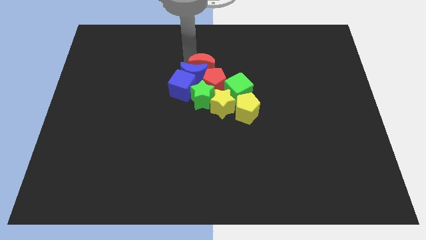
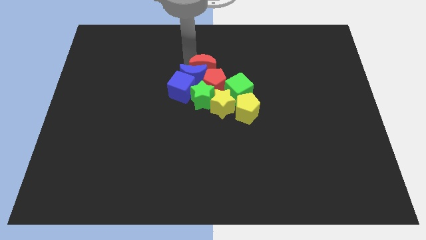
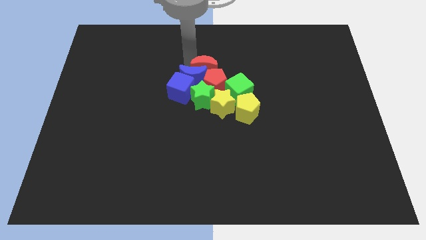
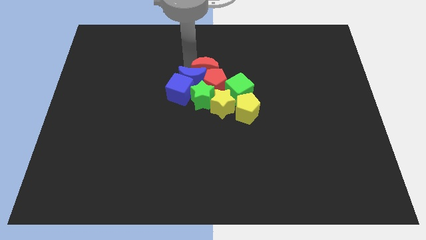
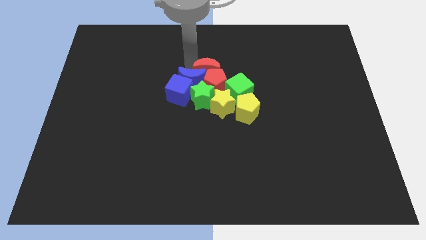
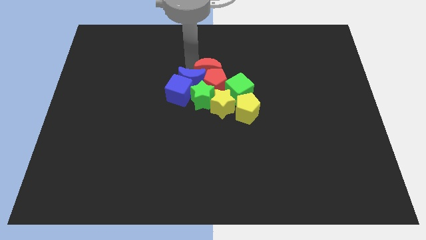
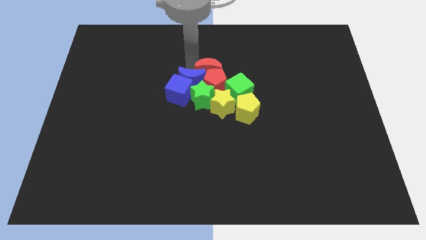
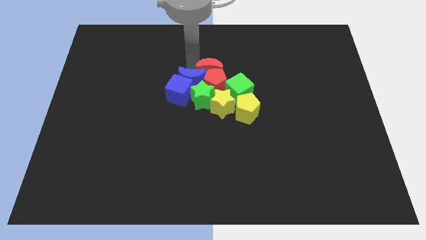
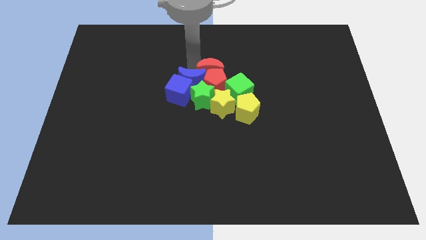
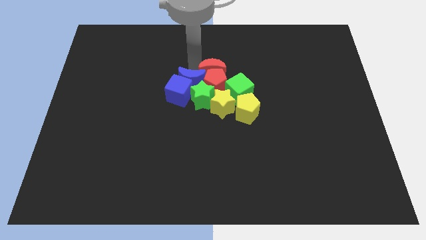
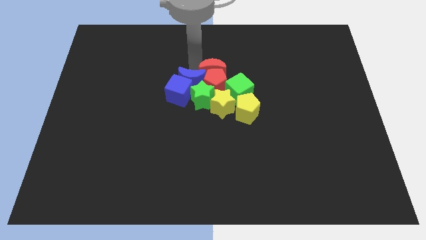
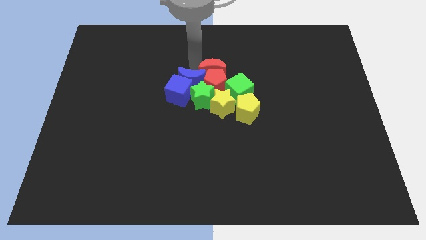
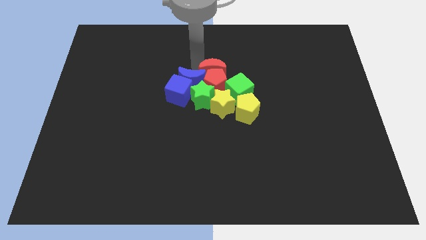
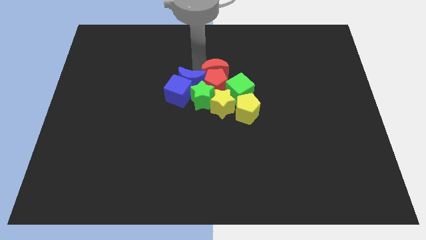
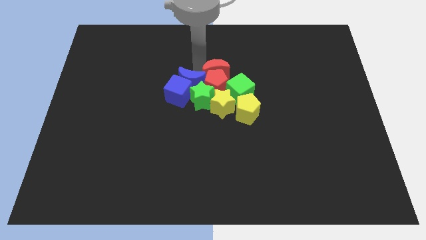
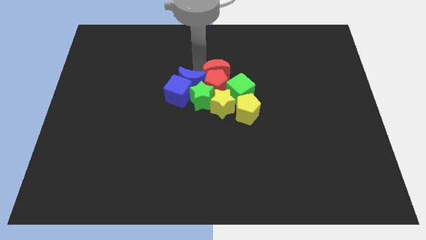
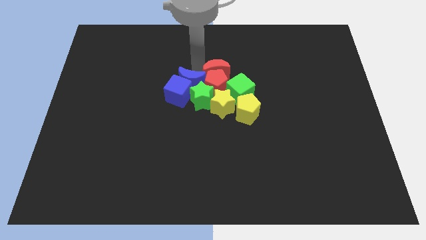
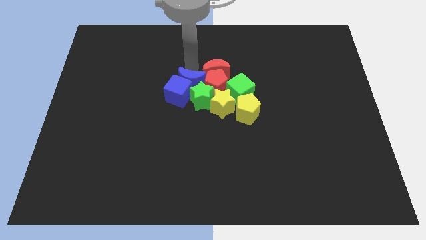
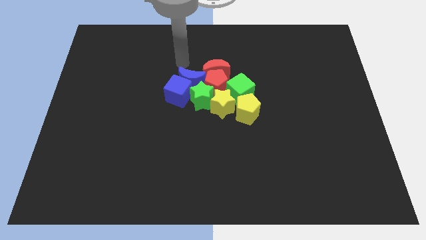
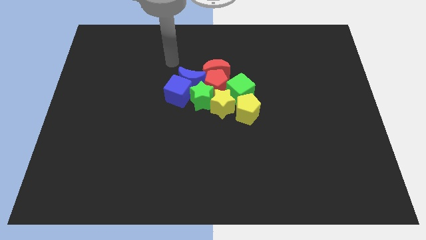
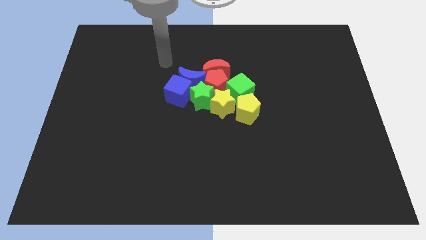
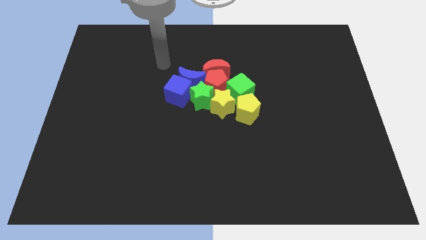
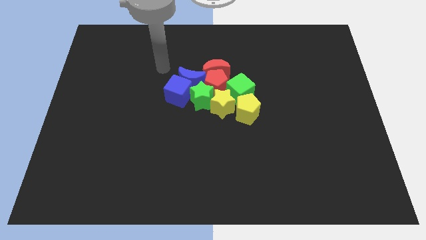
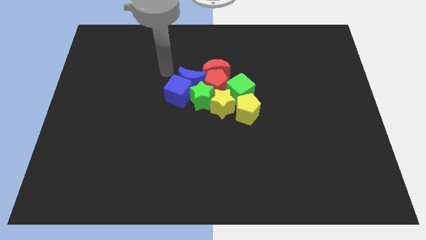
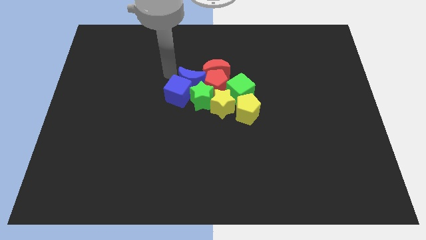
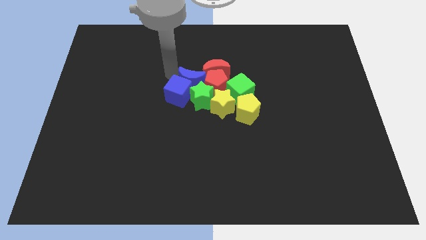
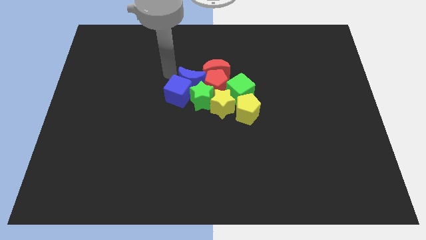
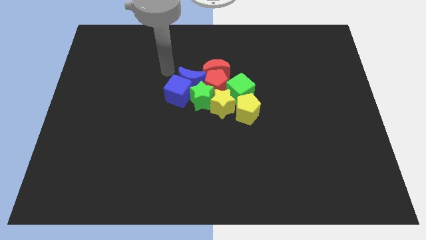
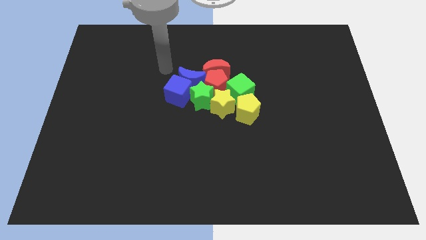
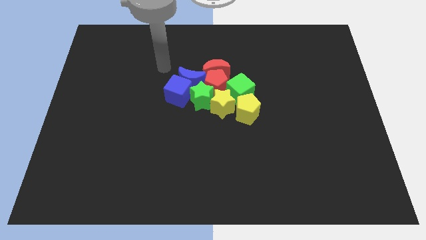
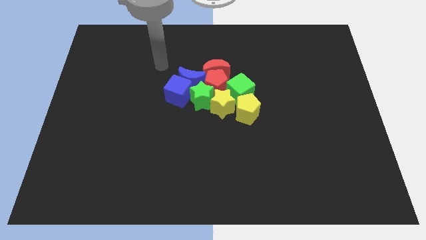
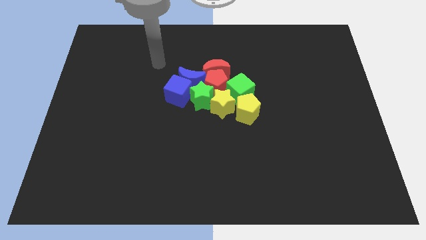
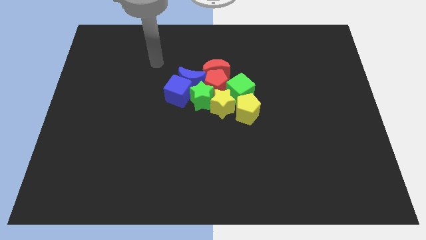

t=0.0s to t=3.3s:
move your arm away from the blue blocks

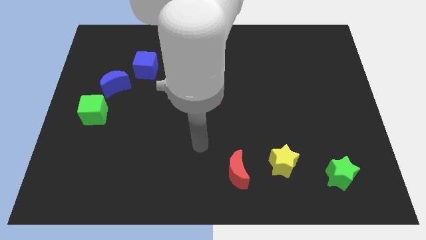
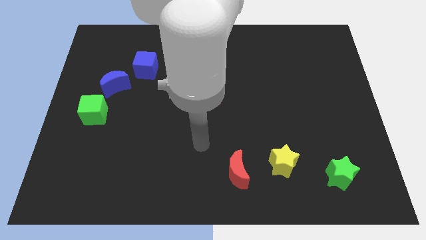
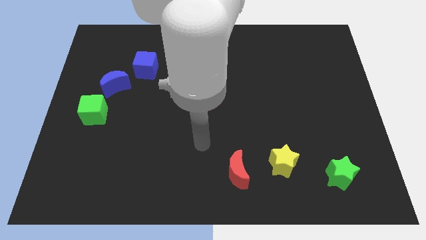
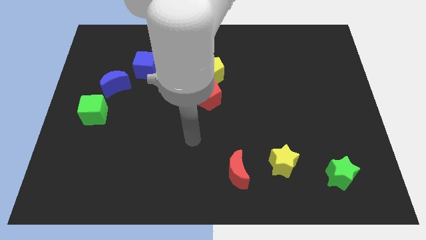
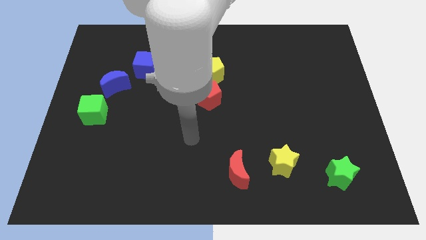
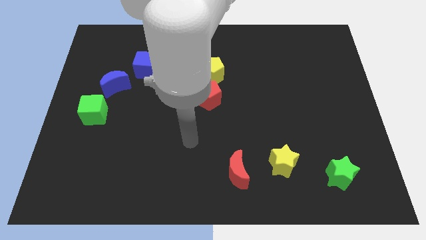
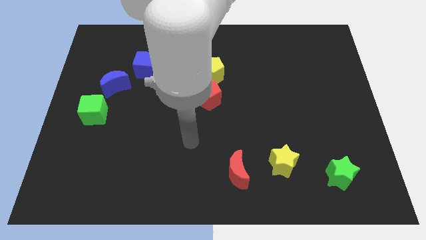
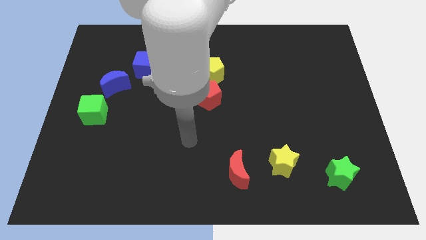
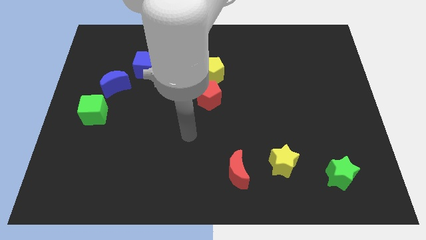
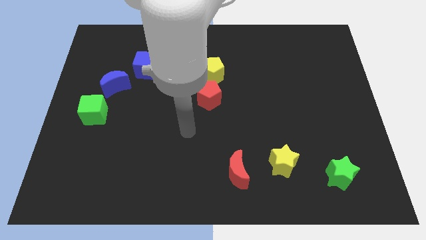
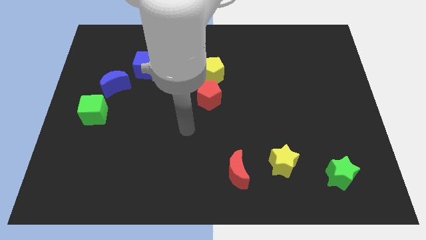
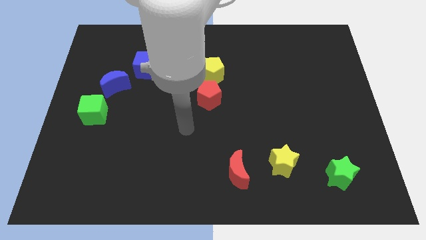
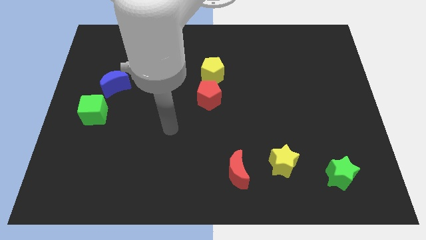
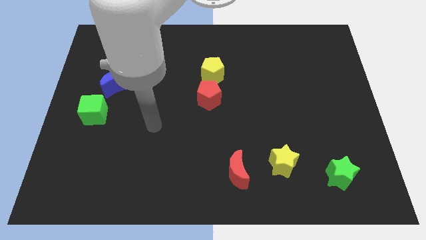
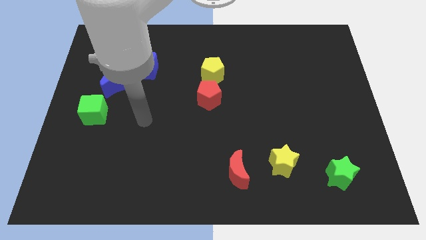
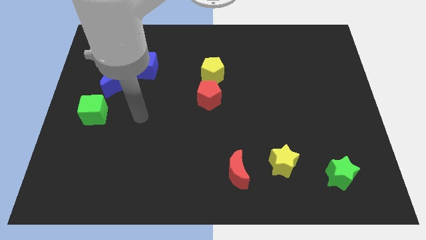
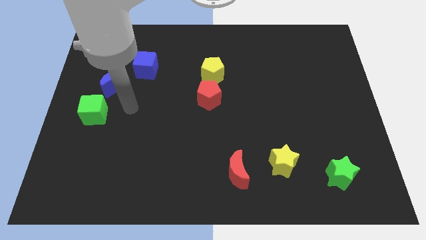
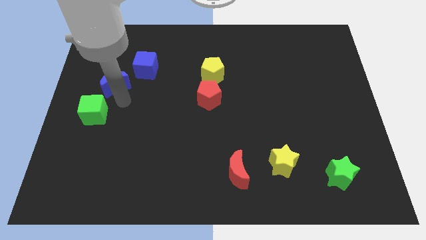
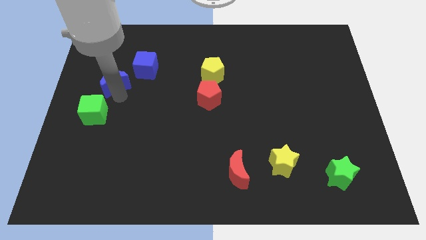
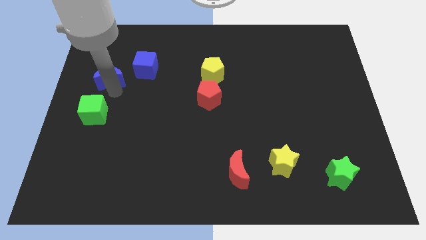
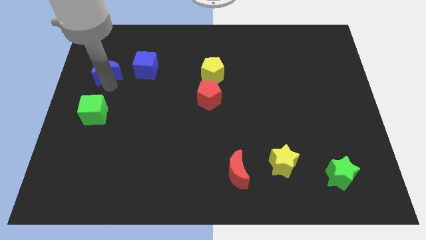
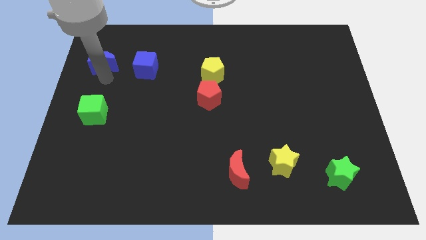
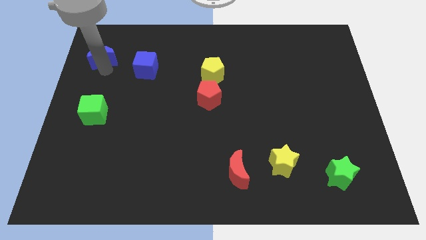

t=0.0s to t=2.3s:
push the blue moon away from the cubes

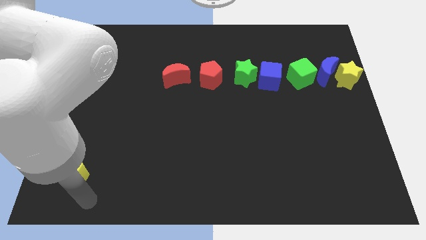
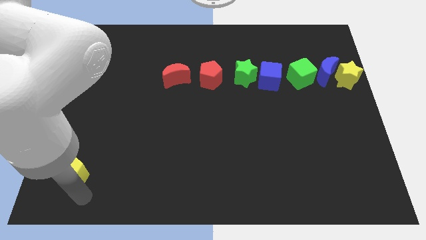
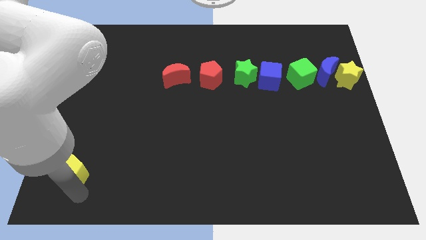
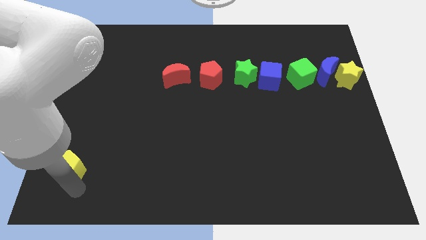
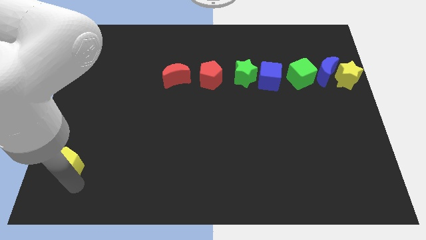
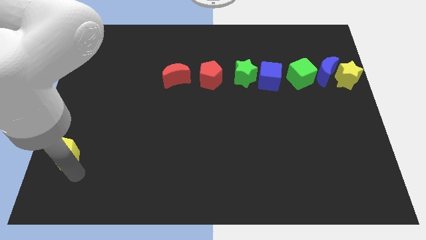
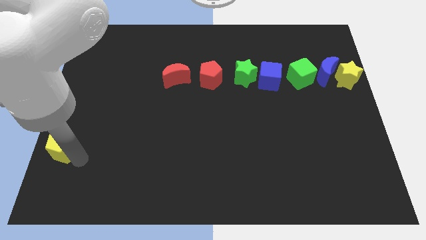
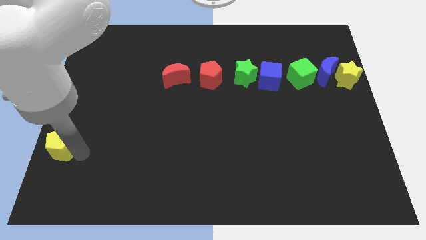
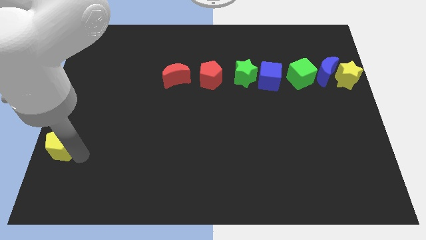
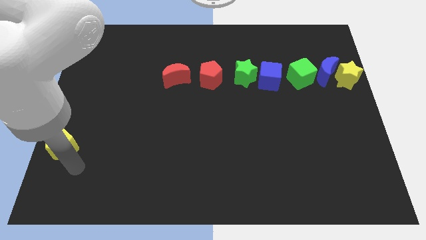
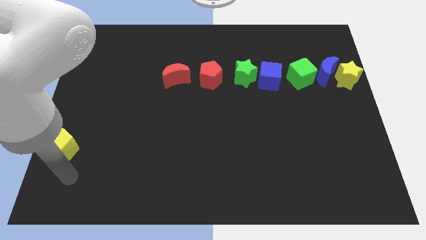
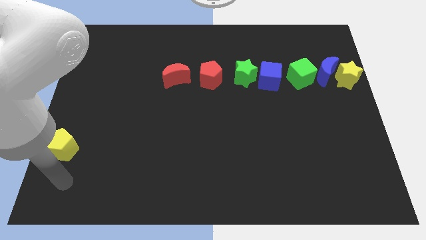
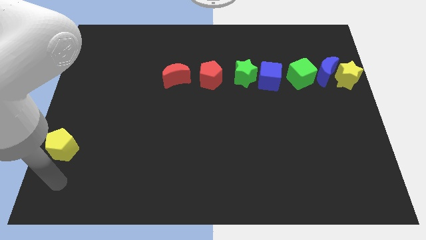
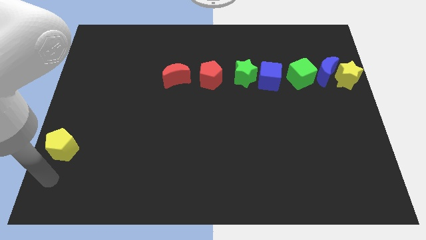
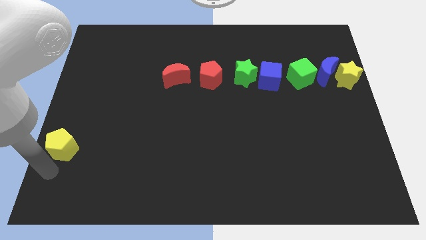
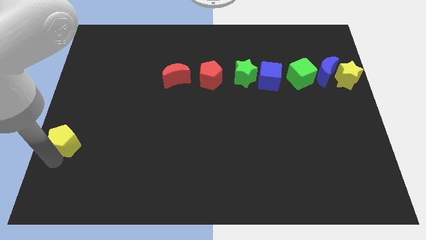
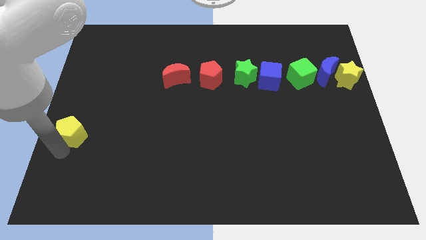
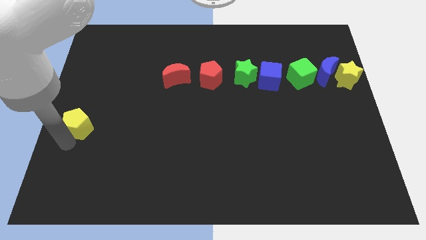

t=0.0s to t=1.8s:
push the yellow pentagon towards the horizontal line of blocks

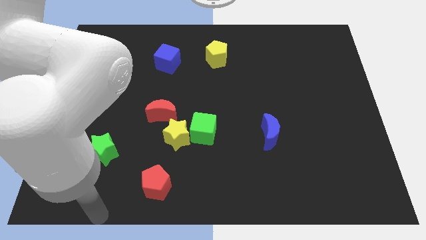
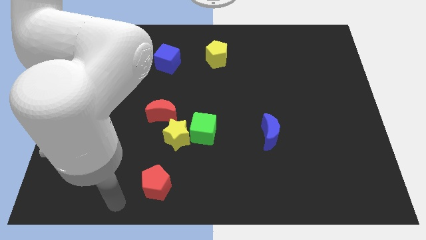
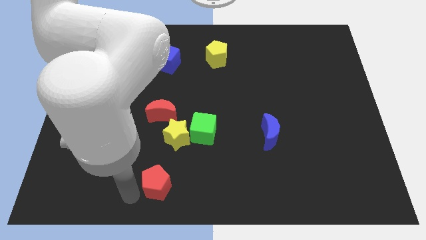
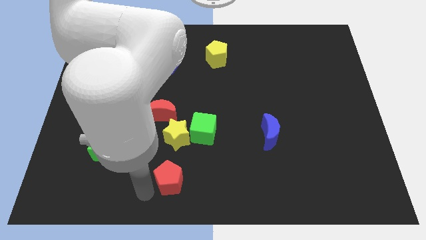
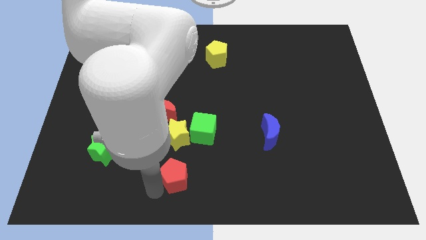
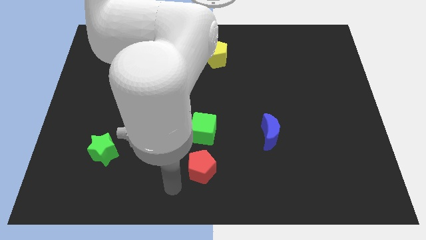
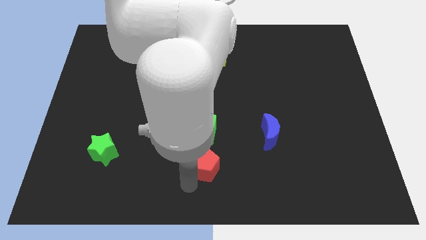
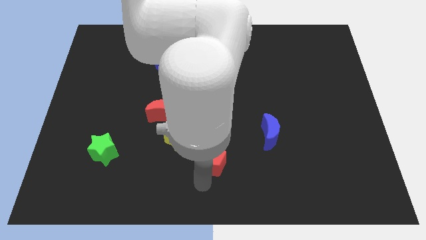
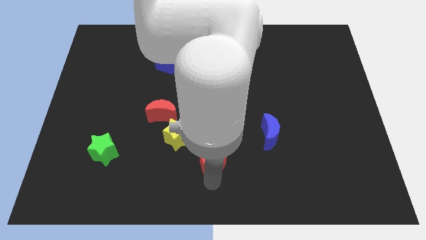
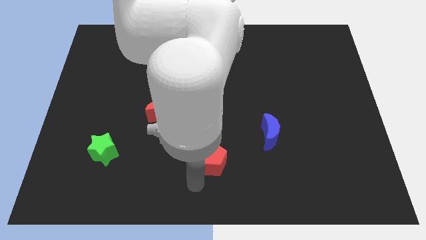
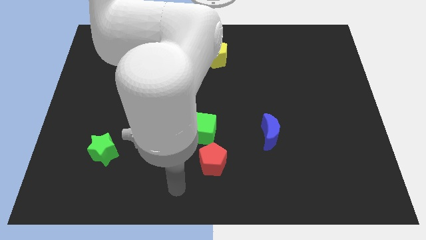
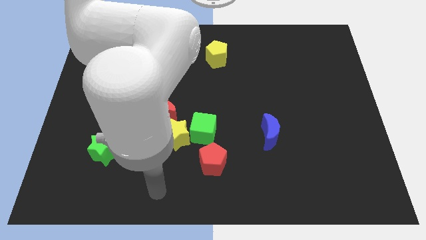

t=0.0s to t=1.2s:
push the red pentagon below the green cube

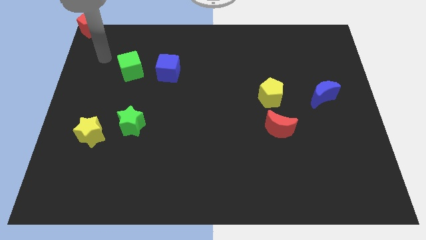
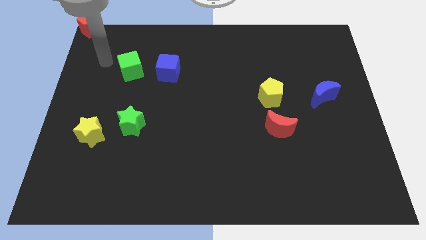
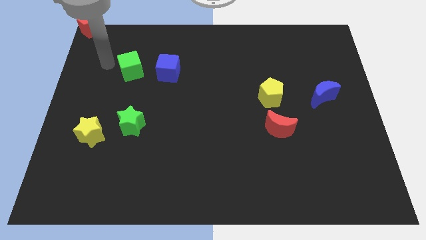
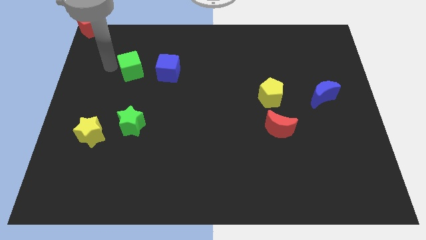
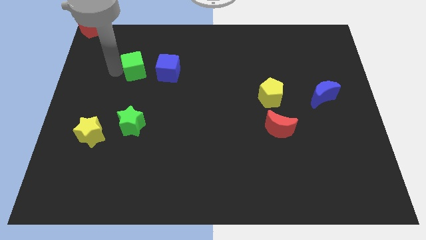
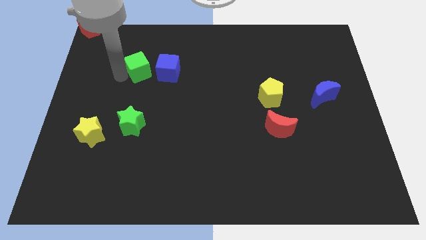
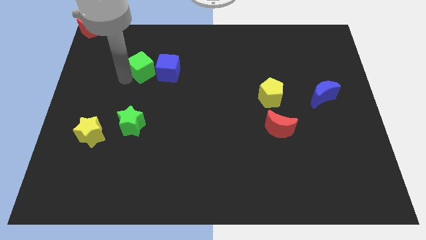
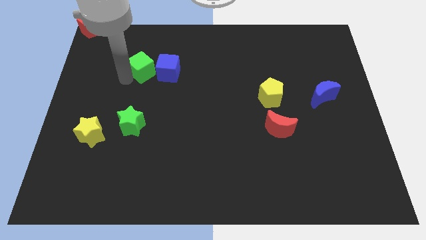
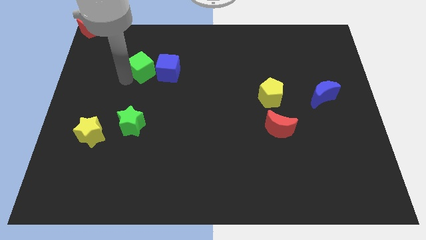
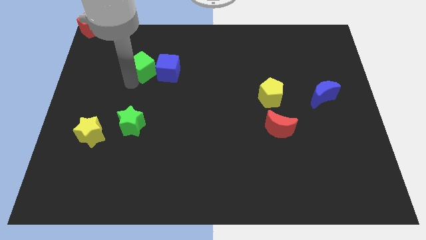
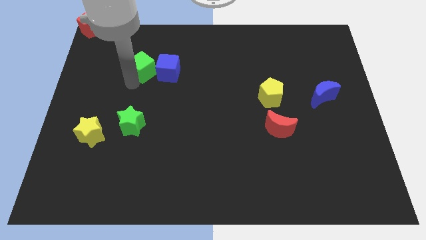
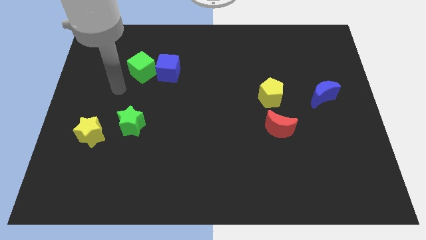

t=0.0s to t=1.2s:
push green cube into blue cube
